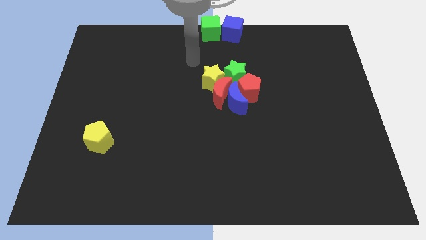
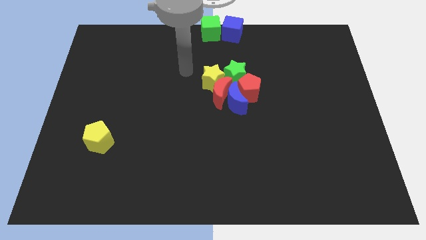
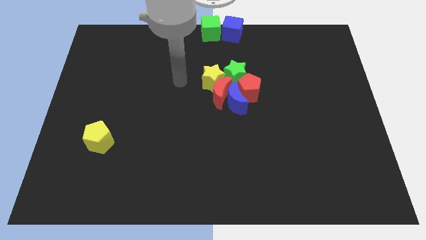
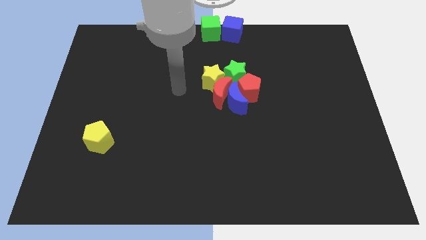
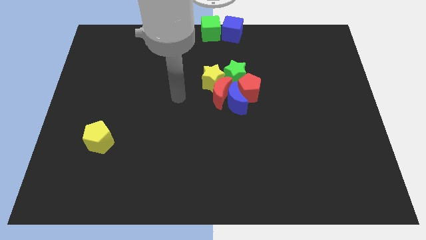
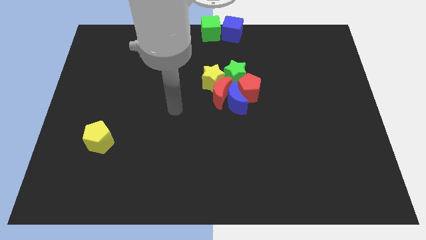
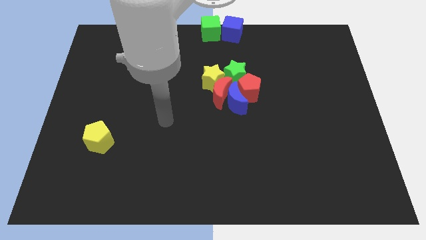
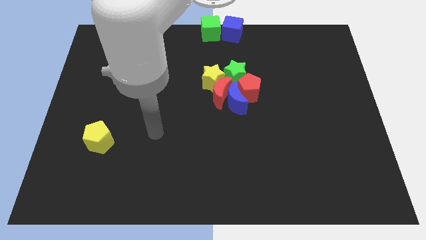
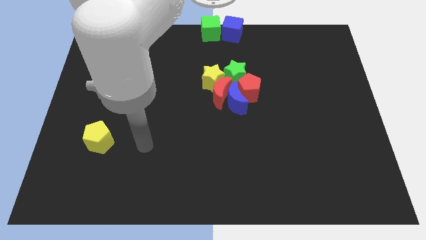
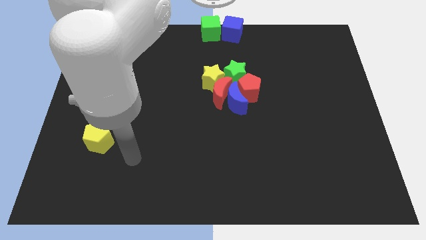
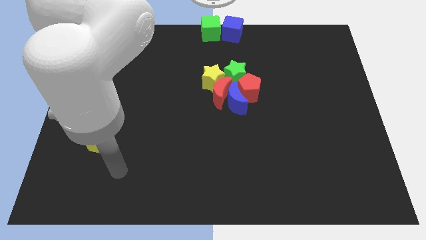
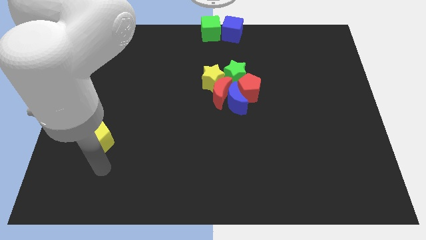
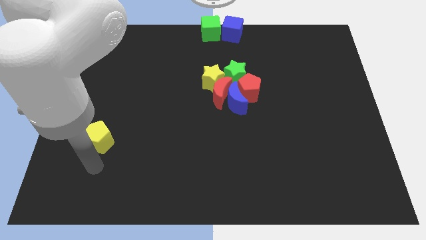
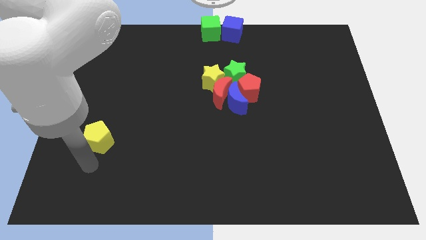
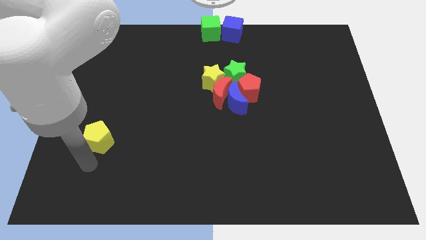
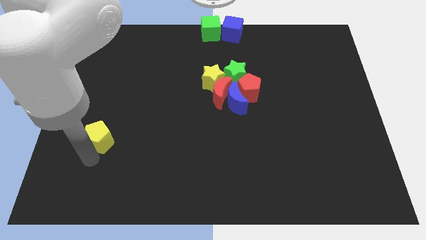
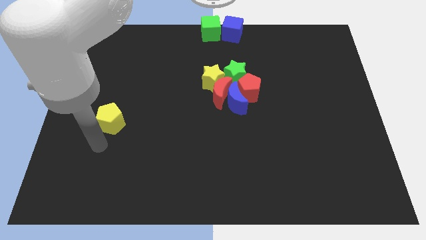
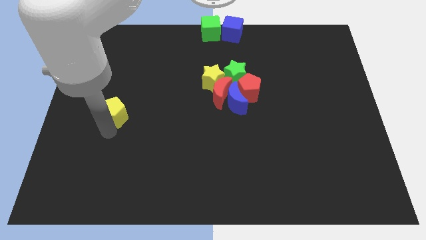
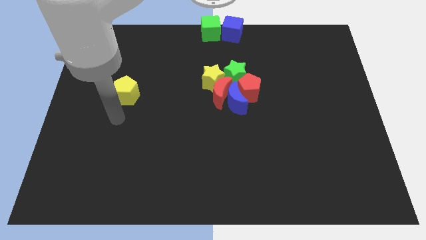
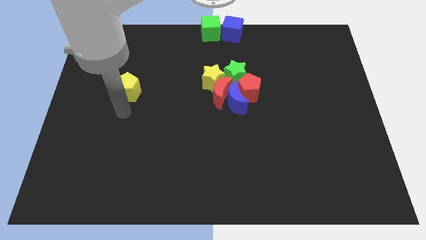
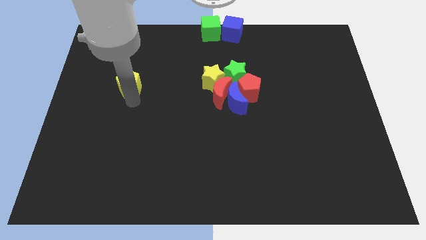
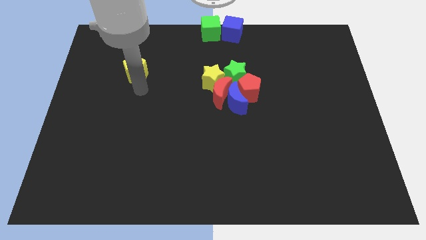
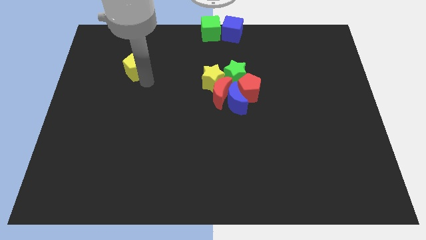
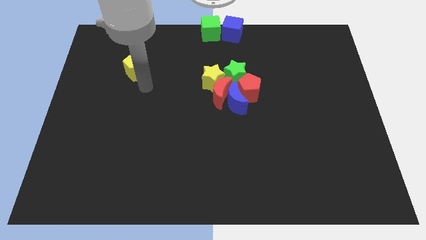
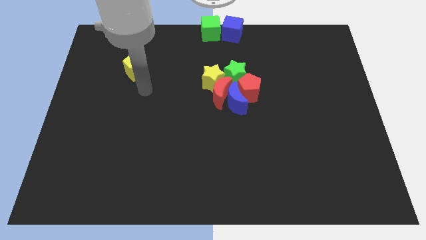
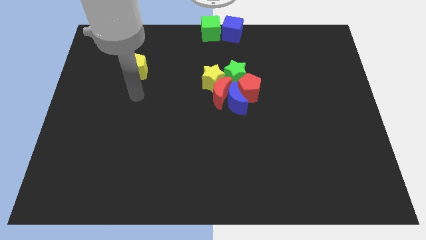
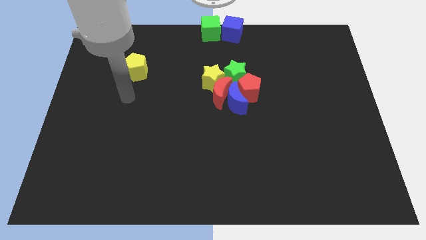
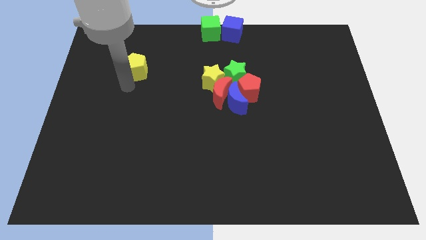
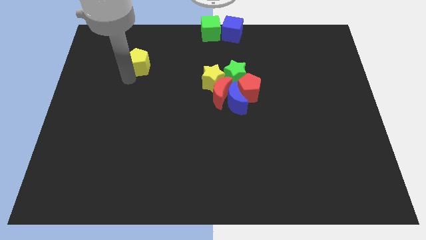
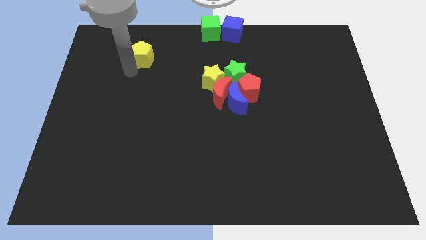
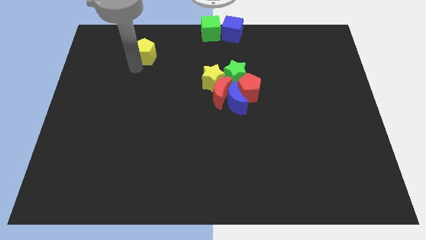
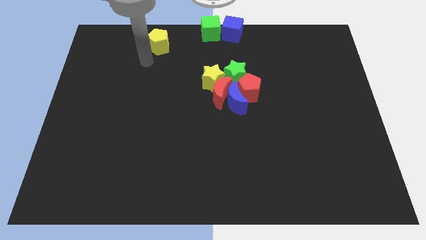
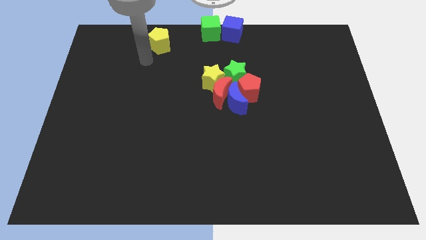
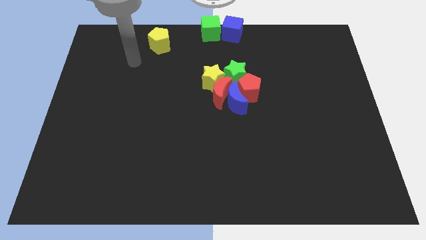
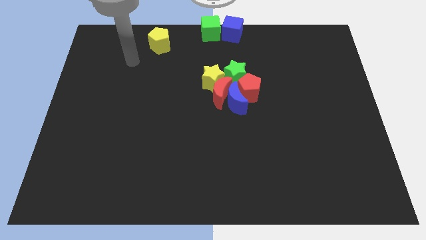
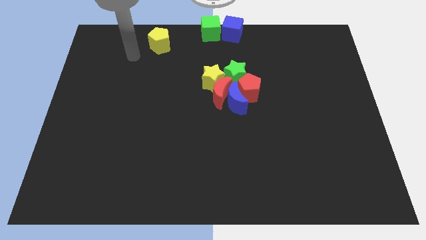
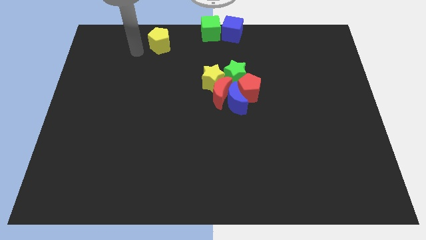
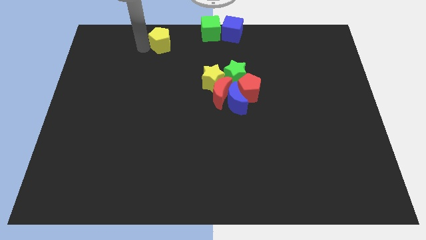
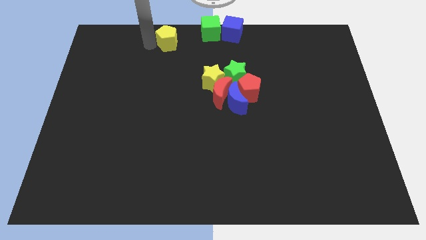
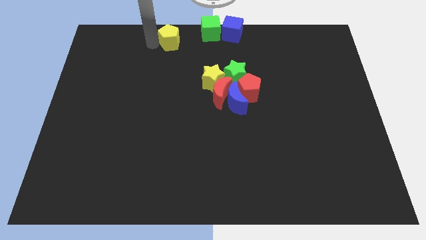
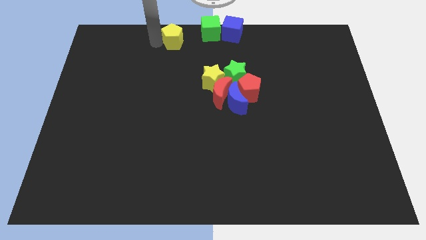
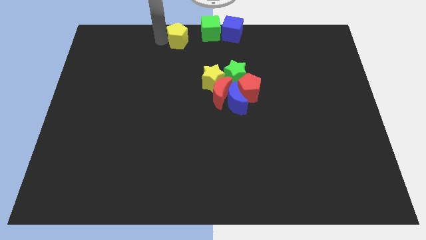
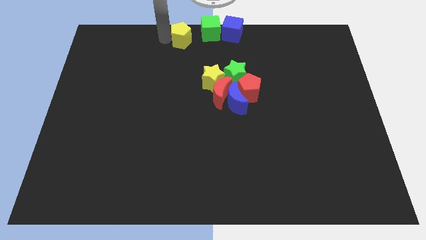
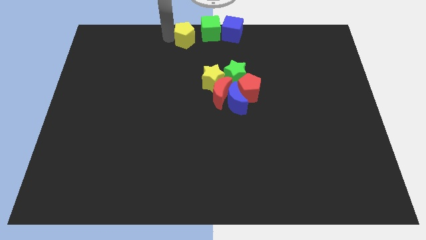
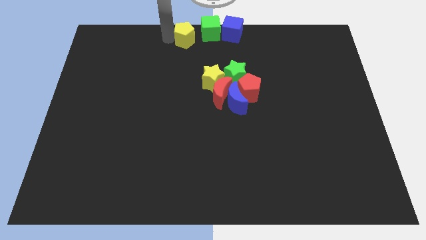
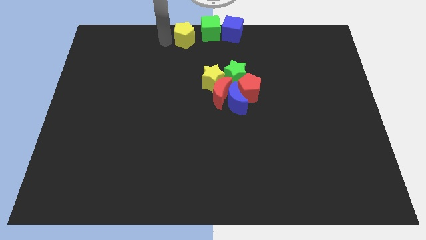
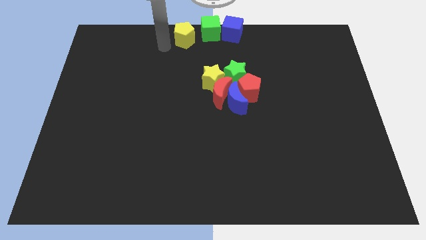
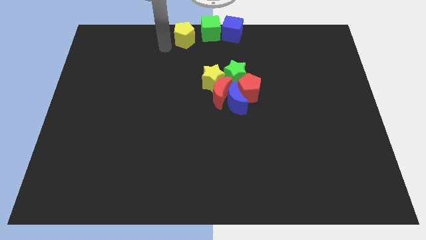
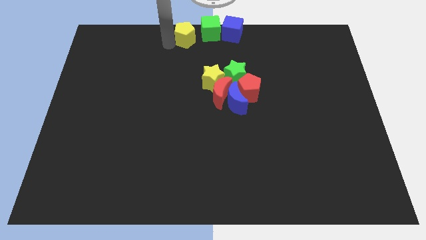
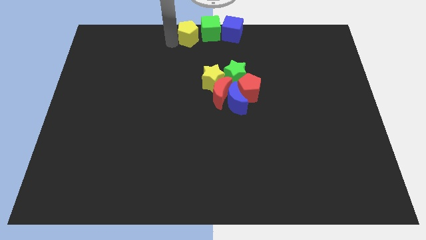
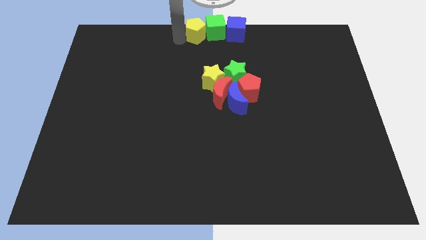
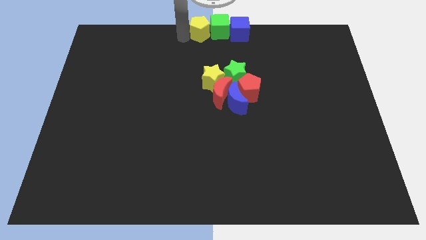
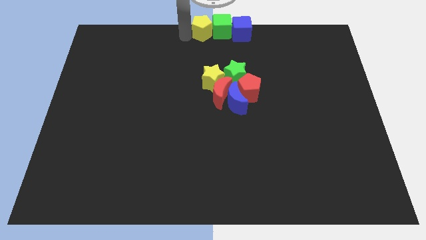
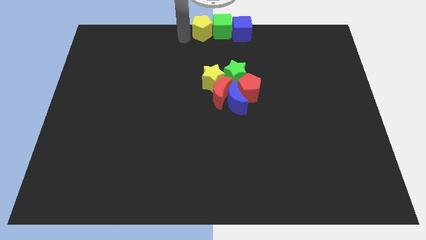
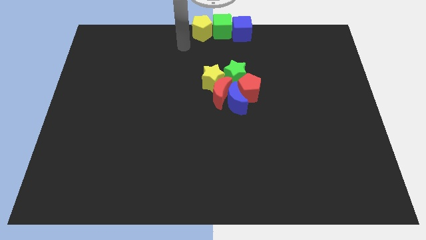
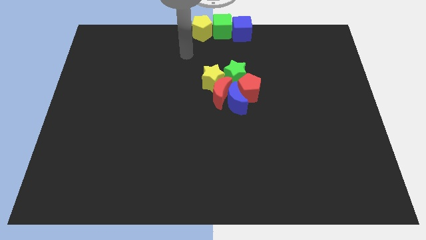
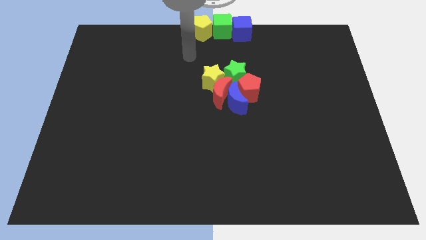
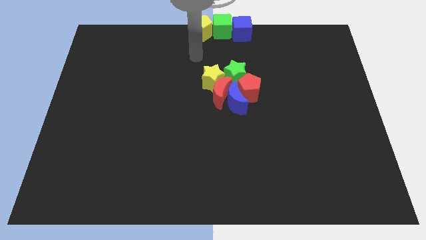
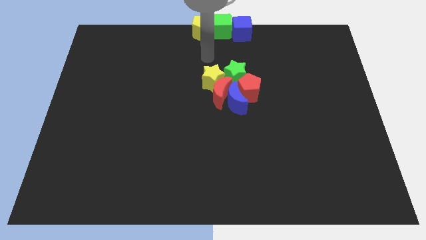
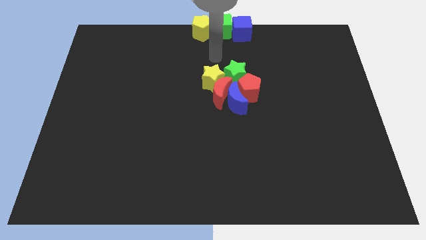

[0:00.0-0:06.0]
place the yellow pentagon to the left of the green cube

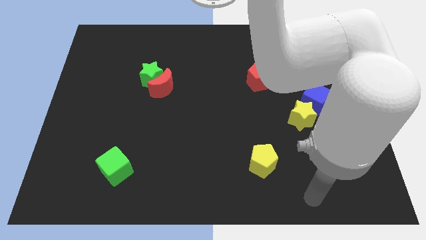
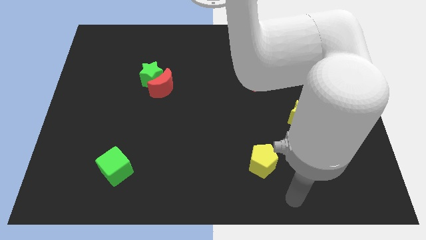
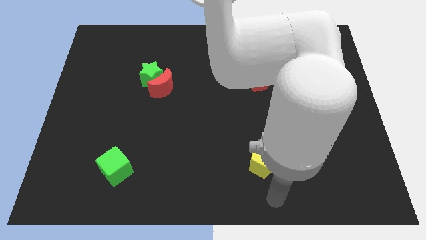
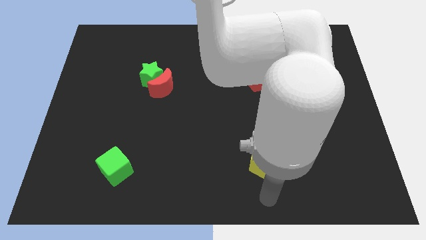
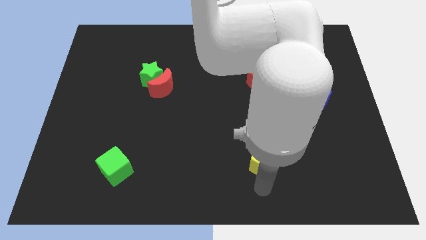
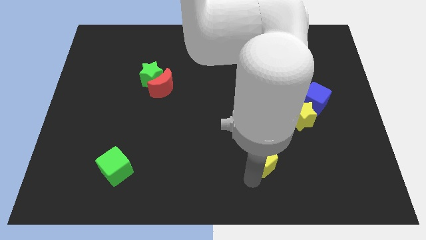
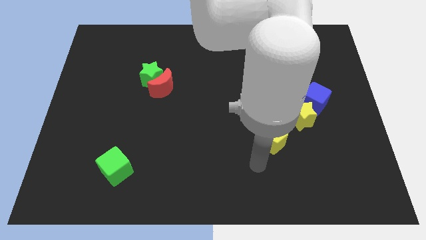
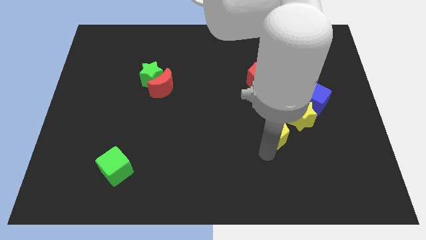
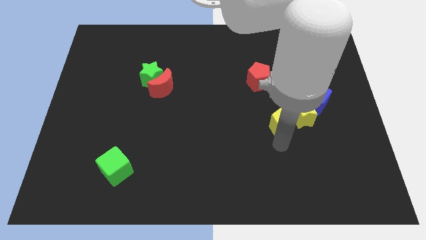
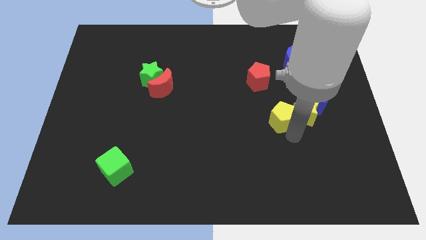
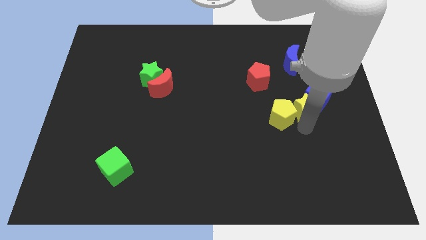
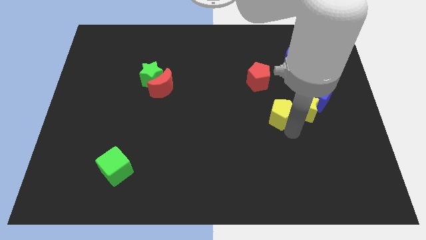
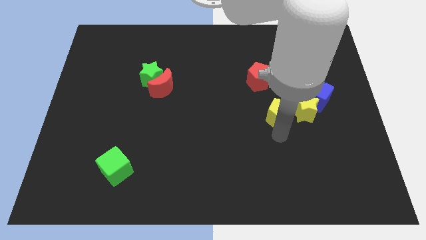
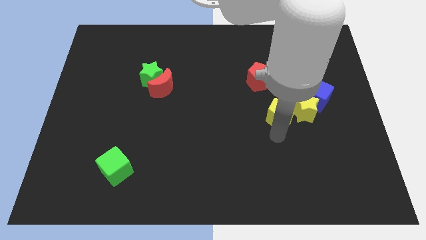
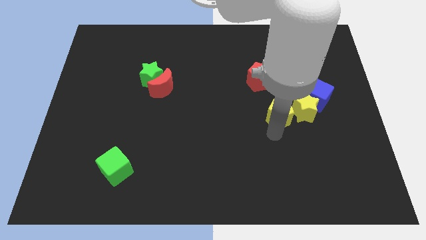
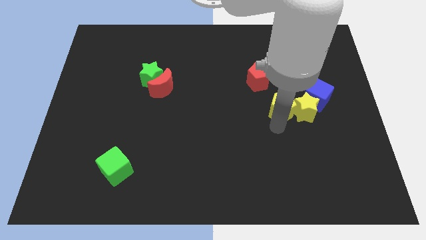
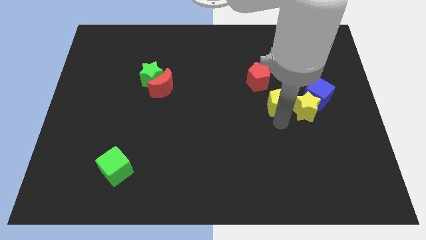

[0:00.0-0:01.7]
push the yellow pentagon at the left side of the yellow star

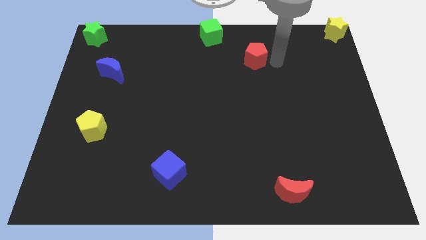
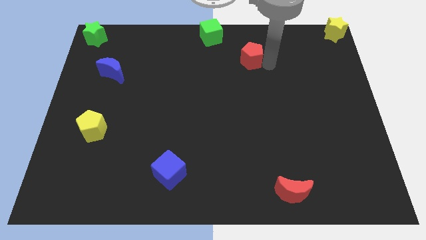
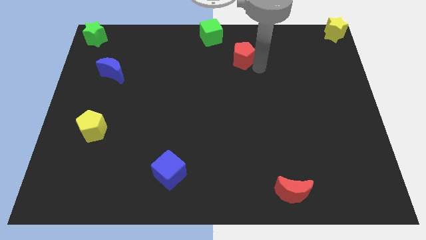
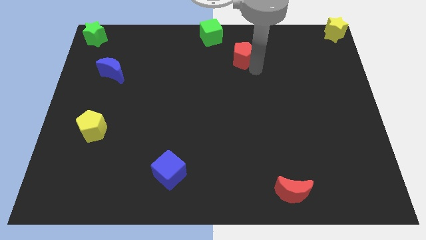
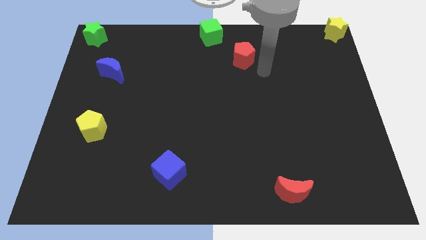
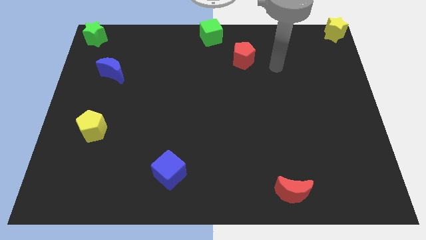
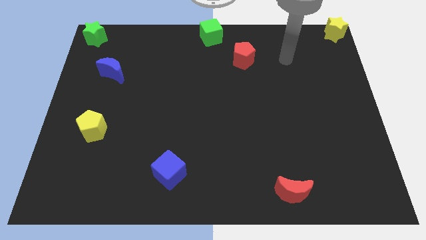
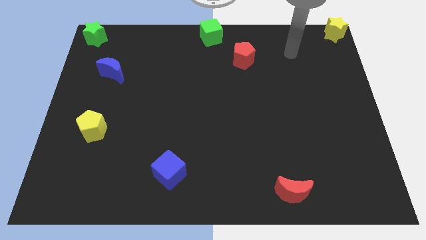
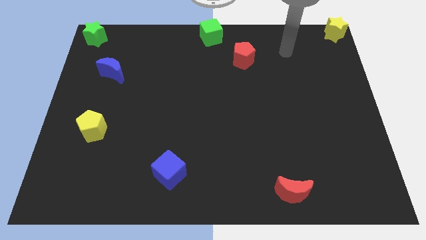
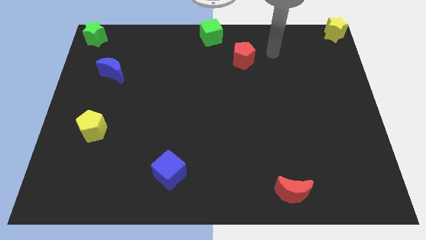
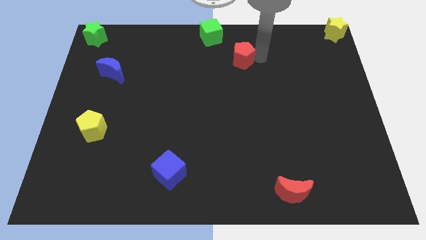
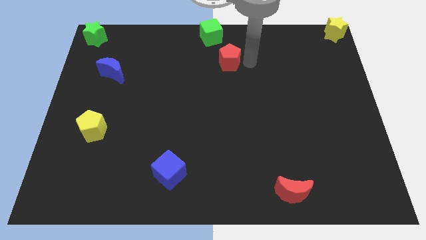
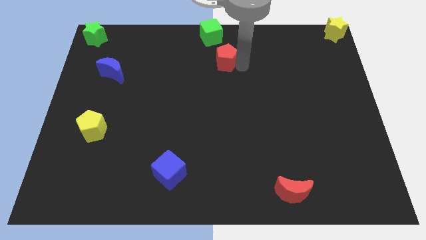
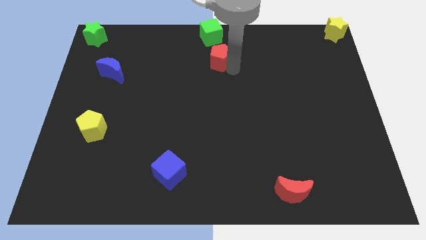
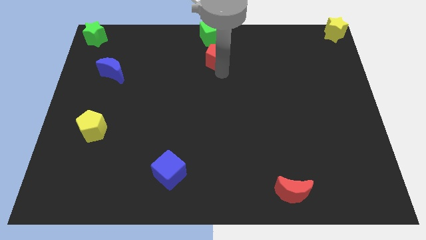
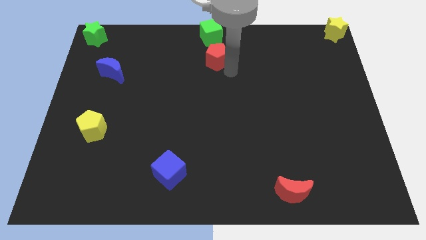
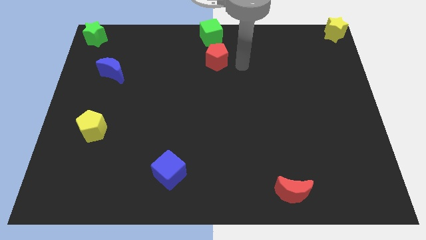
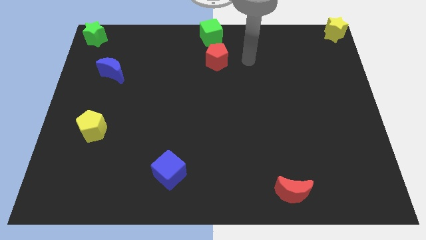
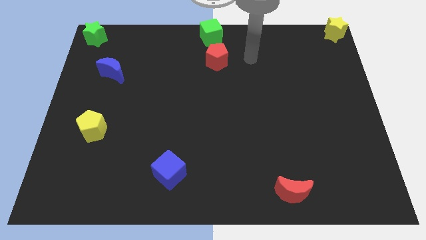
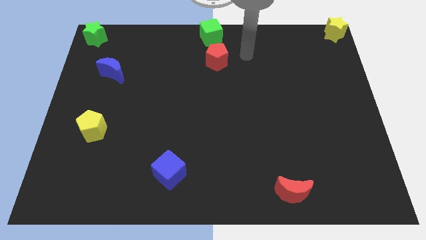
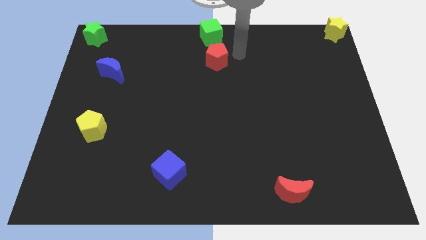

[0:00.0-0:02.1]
slide red pentagon below the green cube
